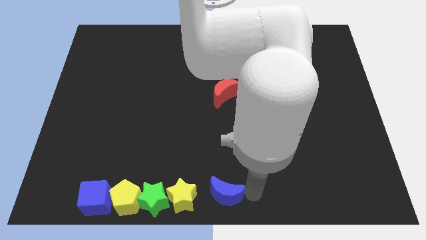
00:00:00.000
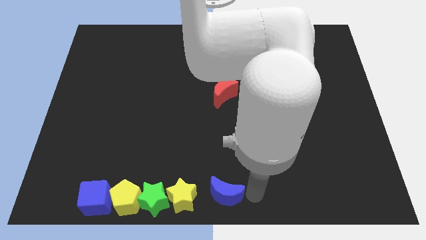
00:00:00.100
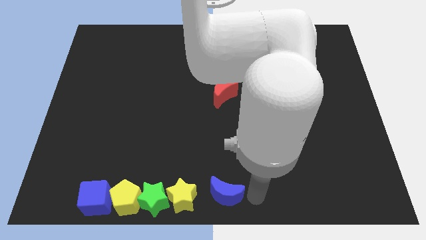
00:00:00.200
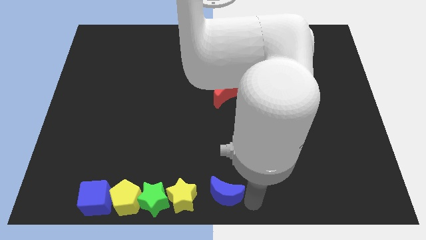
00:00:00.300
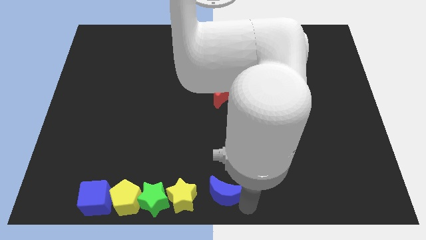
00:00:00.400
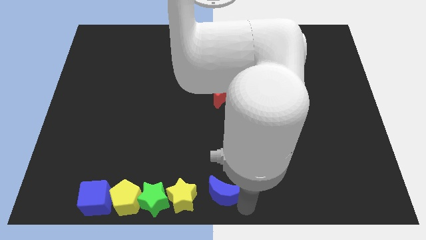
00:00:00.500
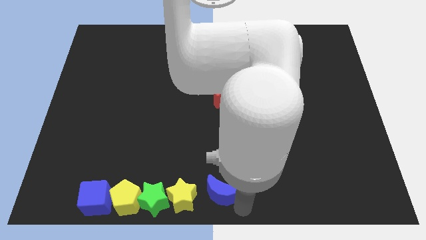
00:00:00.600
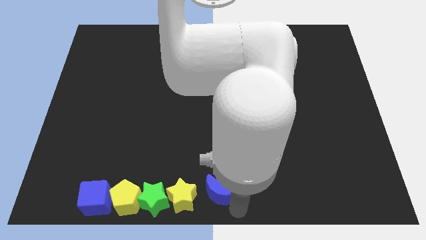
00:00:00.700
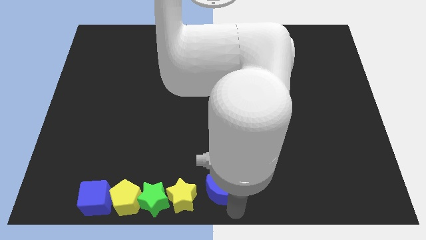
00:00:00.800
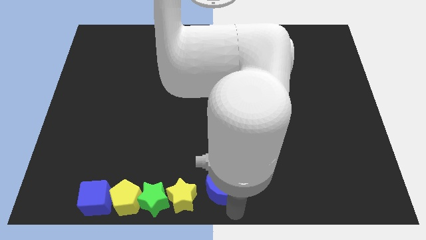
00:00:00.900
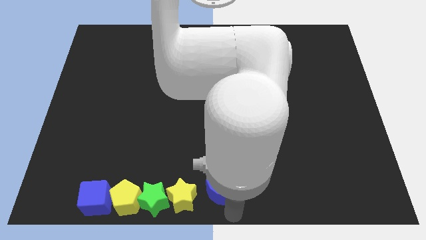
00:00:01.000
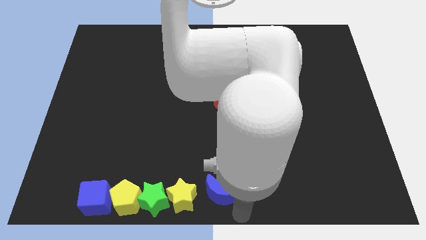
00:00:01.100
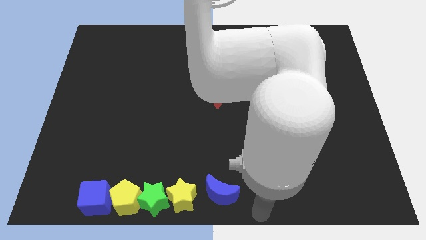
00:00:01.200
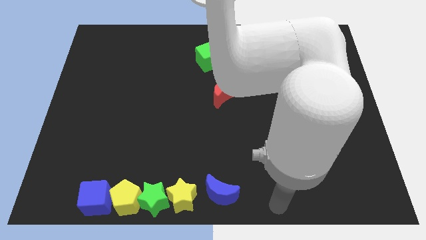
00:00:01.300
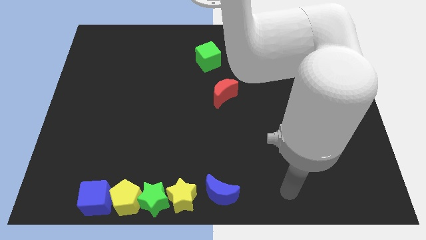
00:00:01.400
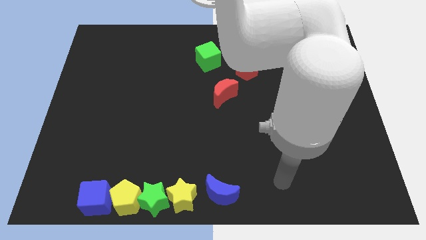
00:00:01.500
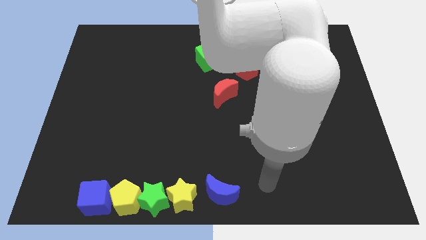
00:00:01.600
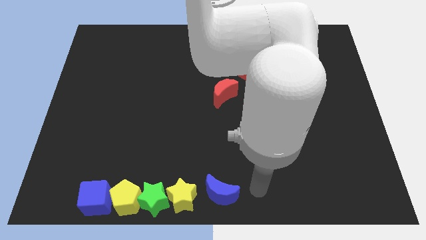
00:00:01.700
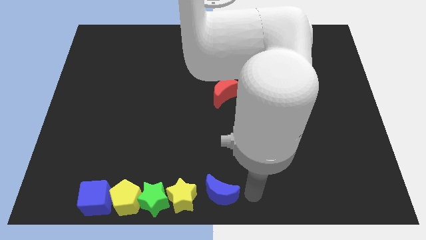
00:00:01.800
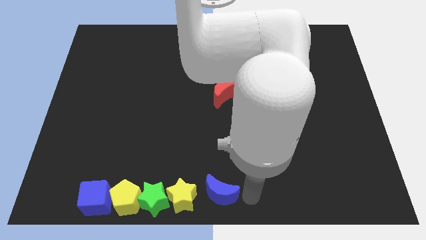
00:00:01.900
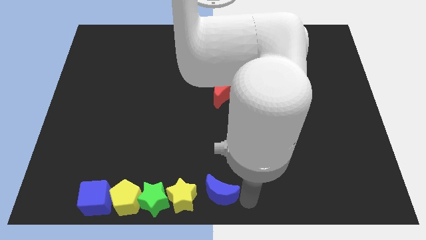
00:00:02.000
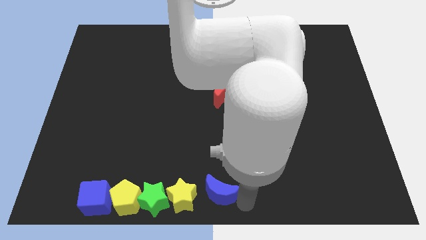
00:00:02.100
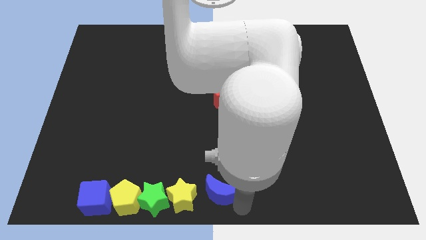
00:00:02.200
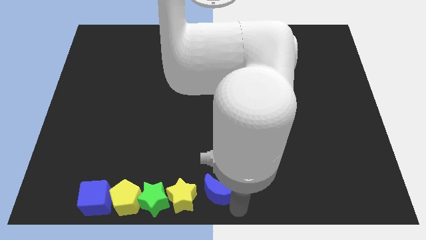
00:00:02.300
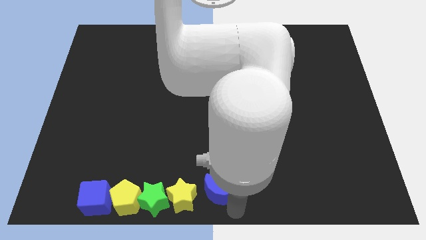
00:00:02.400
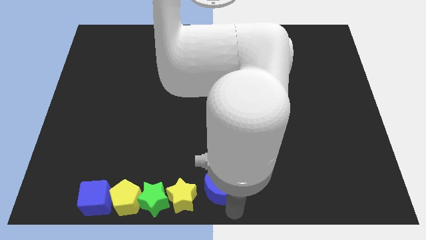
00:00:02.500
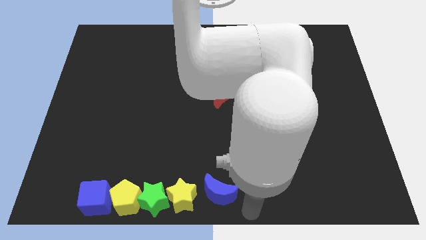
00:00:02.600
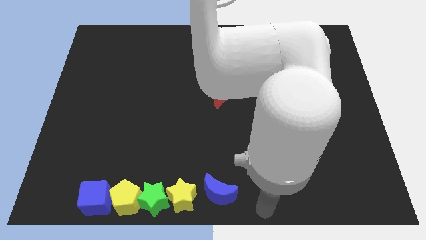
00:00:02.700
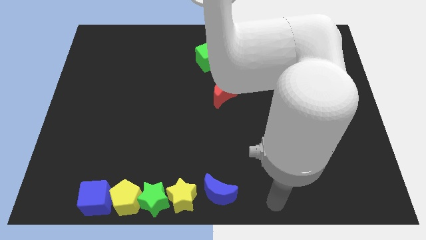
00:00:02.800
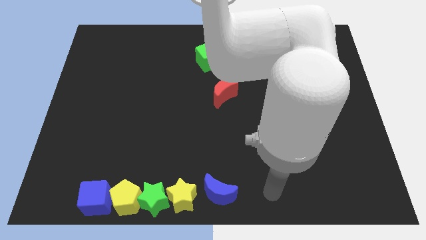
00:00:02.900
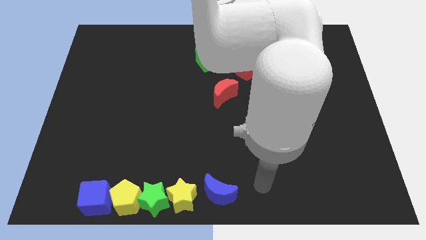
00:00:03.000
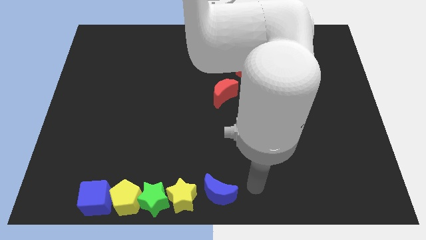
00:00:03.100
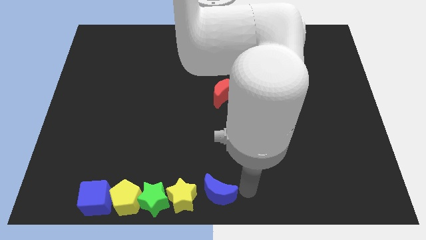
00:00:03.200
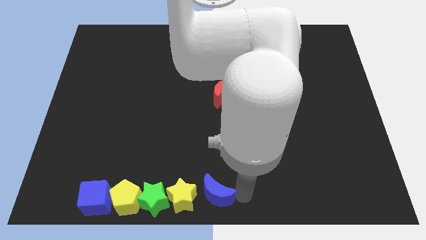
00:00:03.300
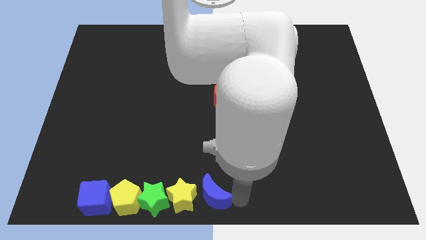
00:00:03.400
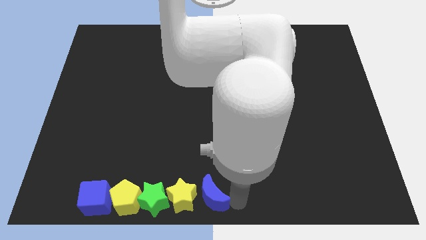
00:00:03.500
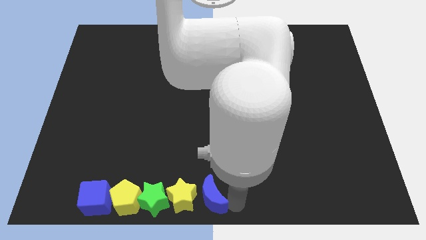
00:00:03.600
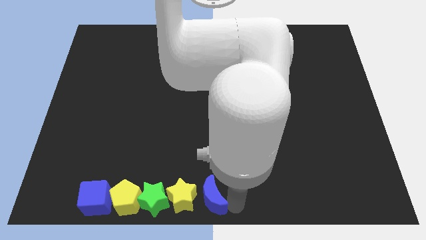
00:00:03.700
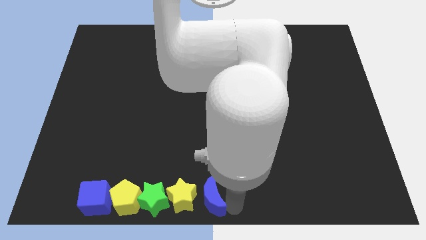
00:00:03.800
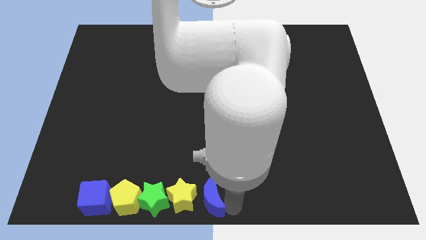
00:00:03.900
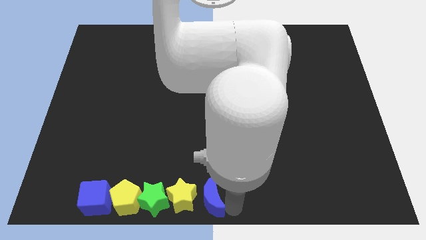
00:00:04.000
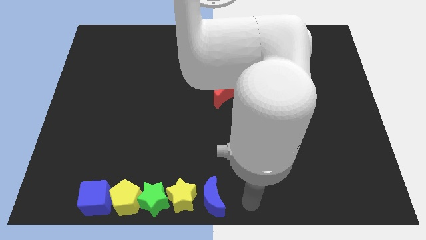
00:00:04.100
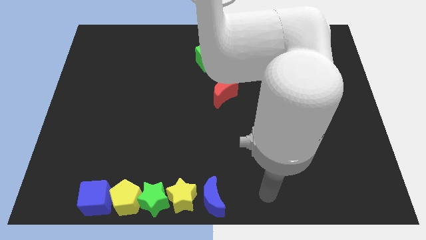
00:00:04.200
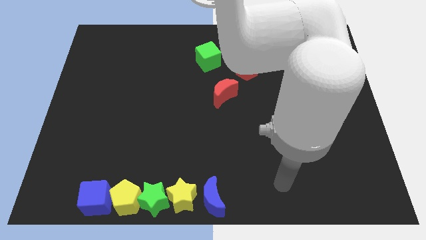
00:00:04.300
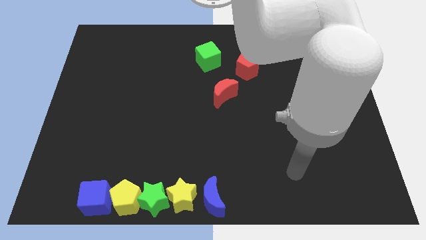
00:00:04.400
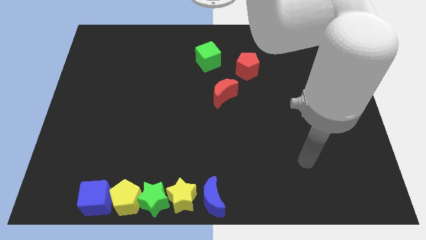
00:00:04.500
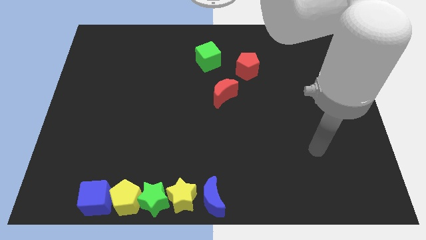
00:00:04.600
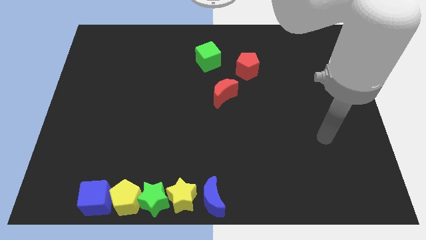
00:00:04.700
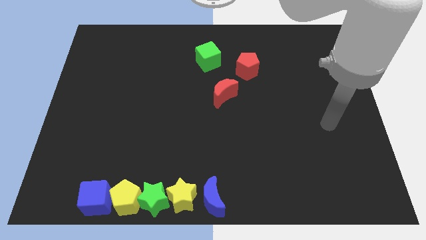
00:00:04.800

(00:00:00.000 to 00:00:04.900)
slide blue moon right to the yellow star

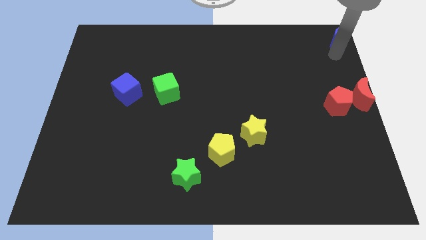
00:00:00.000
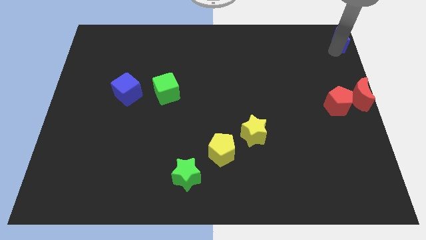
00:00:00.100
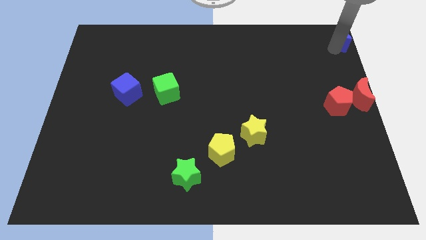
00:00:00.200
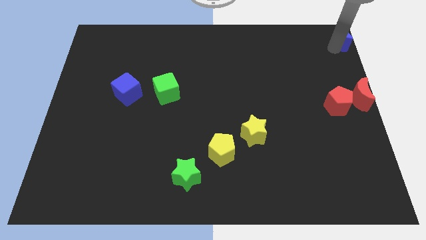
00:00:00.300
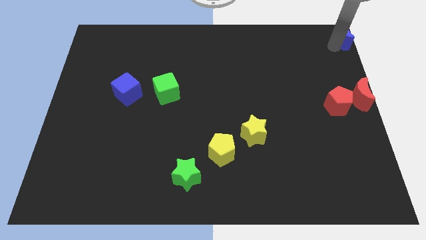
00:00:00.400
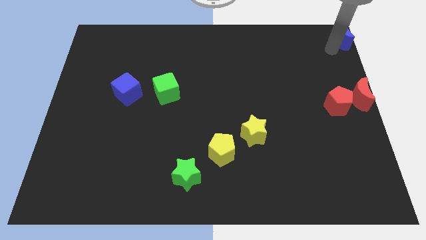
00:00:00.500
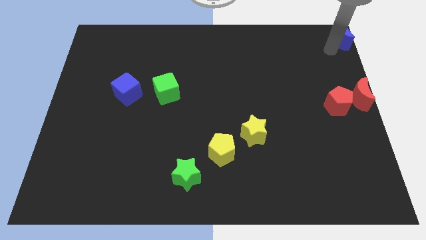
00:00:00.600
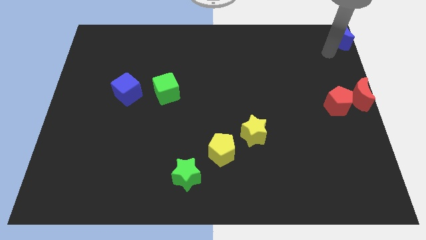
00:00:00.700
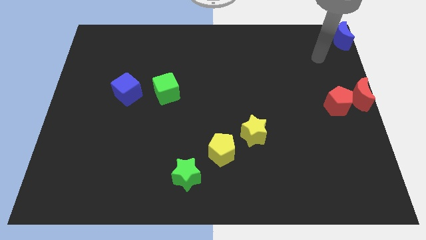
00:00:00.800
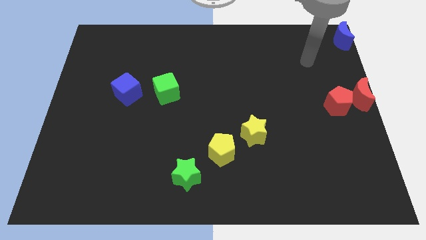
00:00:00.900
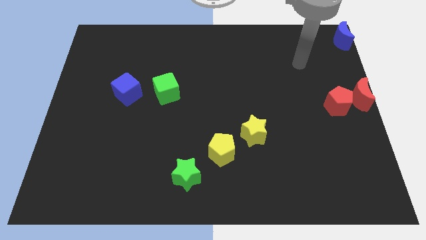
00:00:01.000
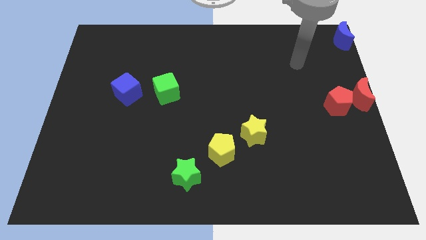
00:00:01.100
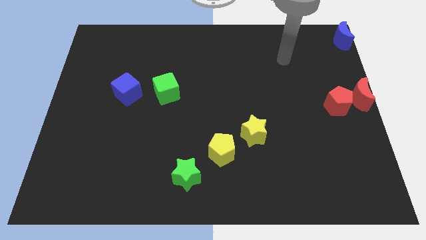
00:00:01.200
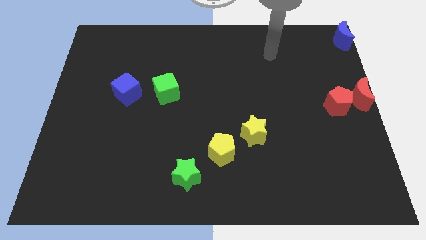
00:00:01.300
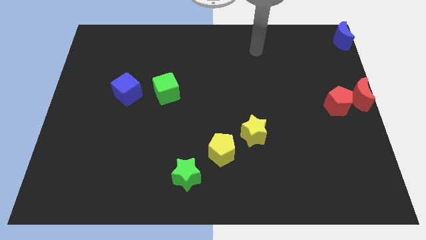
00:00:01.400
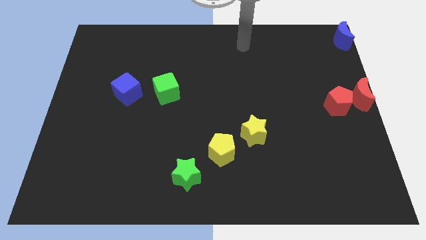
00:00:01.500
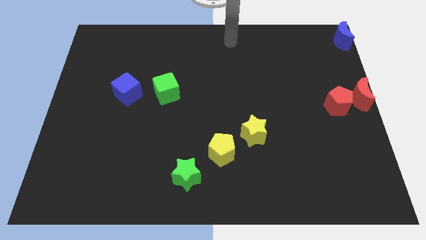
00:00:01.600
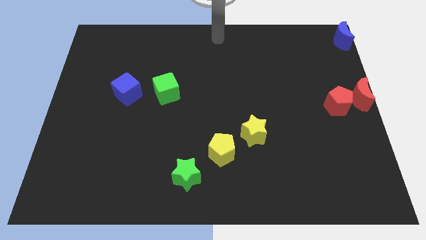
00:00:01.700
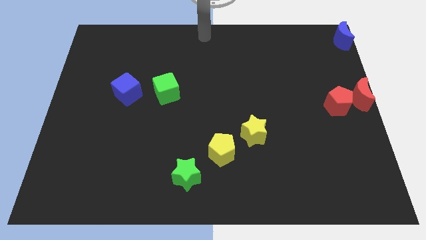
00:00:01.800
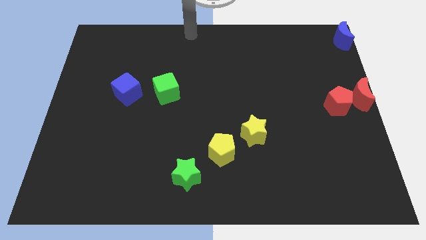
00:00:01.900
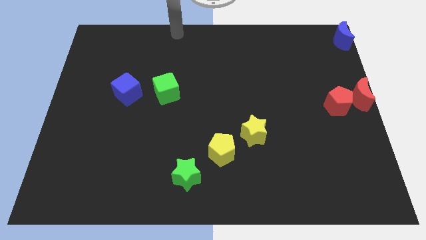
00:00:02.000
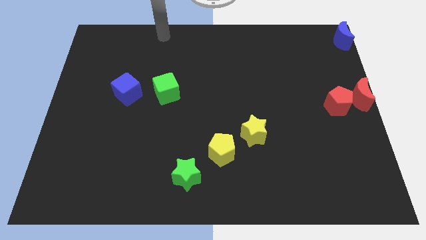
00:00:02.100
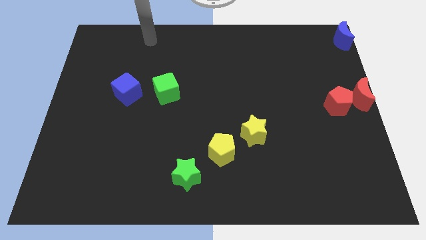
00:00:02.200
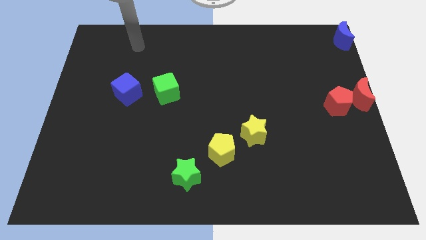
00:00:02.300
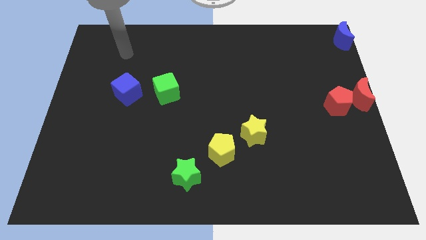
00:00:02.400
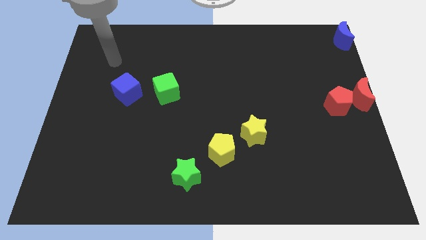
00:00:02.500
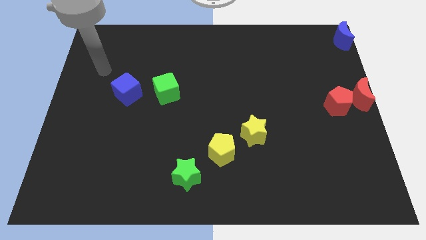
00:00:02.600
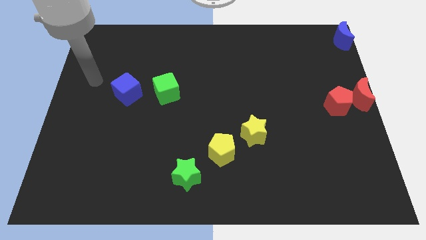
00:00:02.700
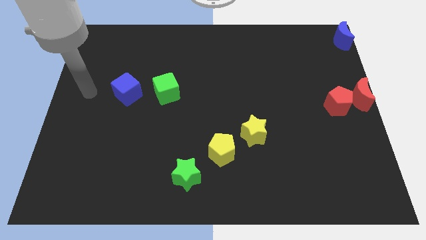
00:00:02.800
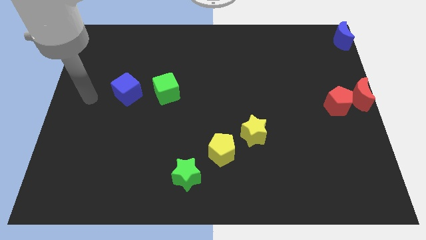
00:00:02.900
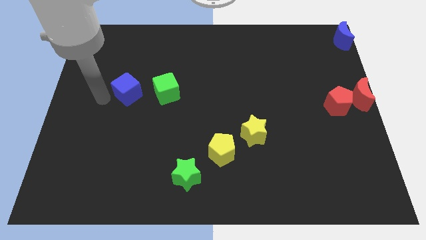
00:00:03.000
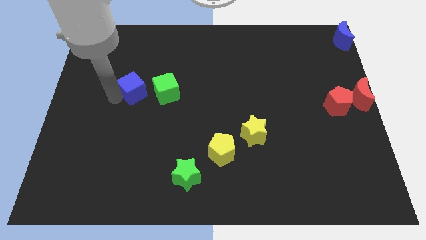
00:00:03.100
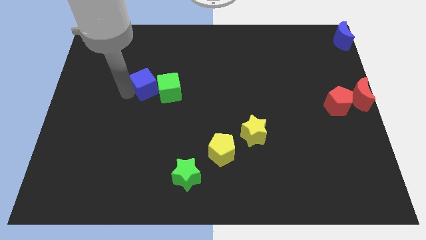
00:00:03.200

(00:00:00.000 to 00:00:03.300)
push your arm to the top left side of the board

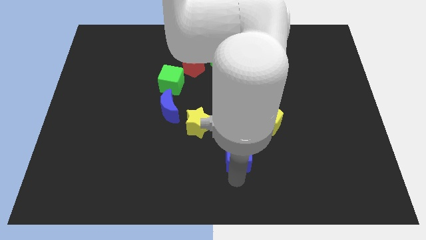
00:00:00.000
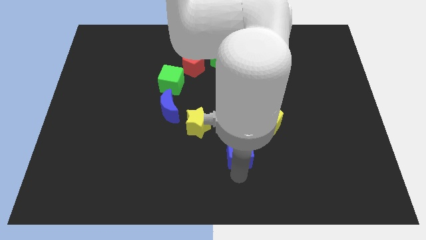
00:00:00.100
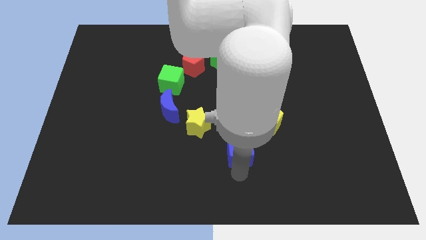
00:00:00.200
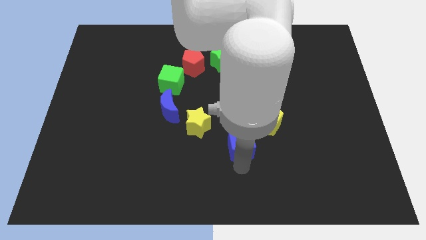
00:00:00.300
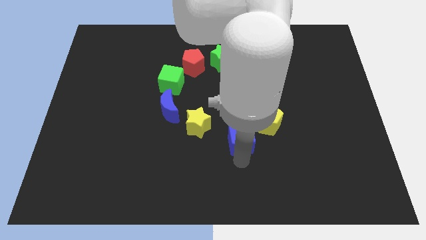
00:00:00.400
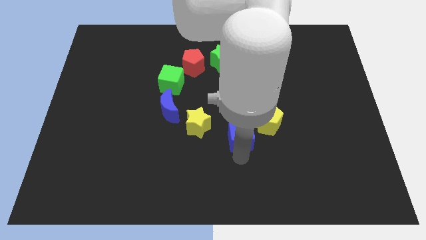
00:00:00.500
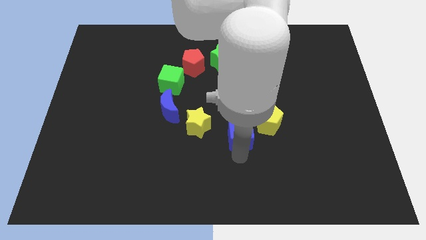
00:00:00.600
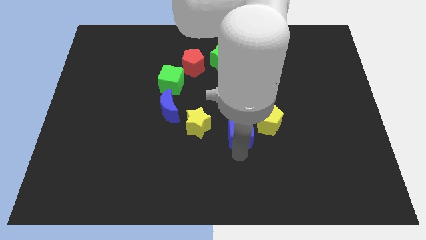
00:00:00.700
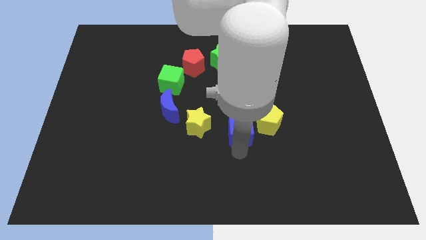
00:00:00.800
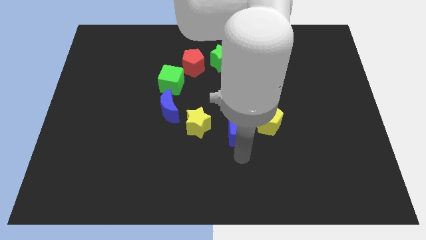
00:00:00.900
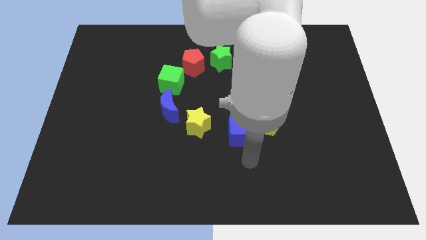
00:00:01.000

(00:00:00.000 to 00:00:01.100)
push the blue cube slightly upwards
